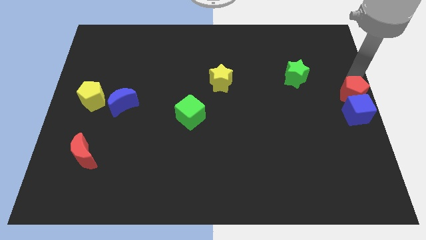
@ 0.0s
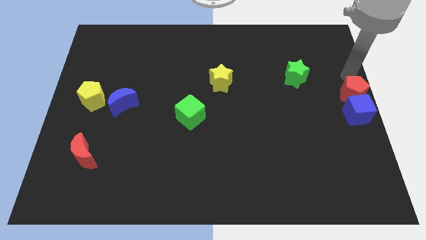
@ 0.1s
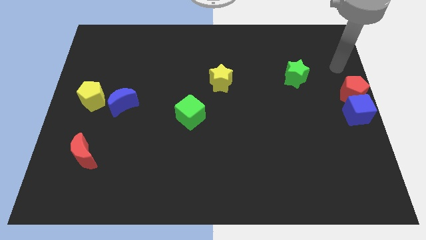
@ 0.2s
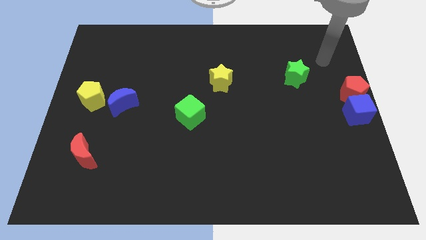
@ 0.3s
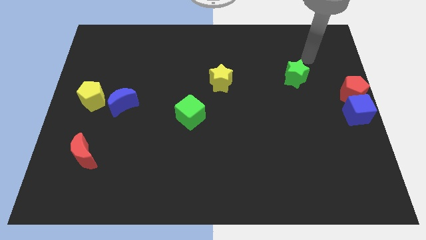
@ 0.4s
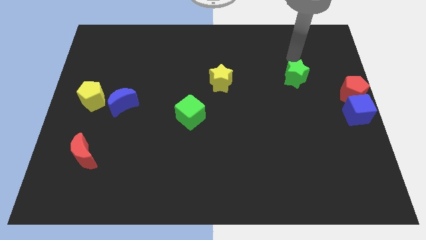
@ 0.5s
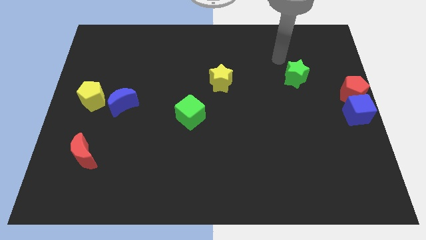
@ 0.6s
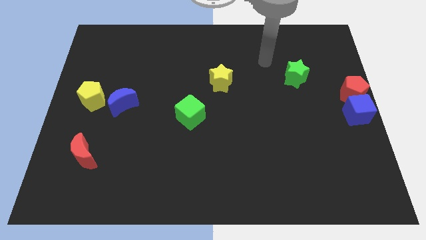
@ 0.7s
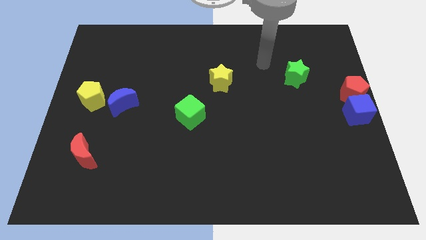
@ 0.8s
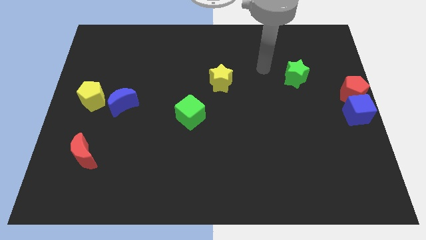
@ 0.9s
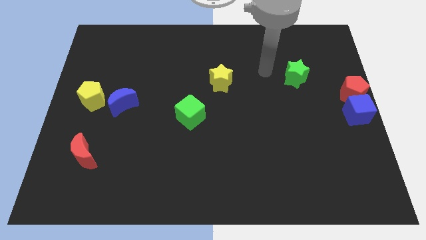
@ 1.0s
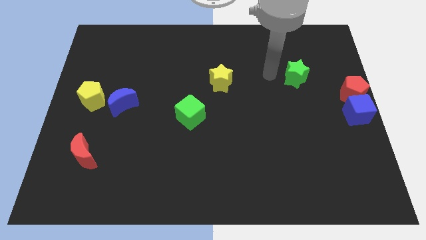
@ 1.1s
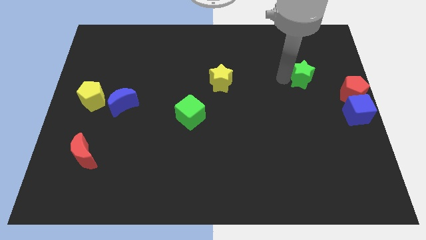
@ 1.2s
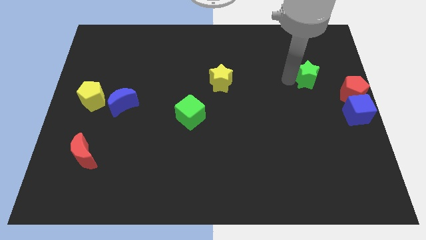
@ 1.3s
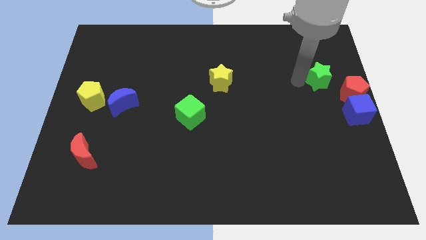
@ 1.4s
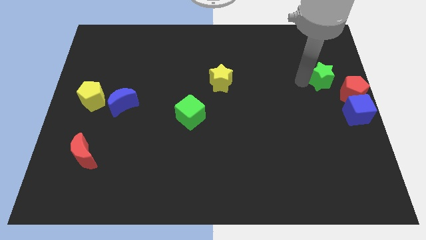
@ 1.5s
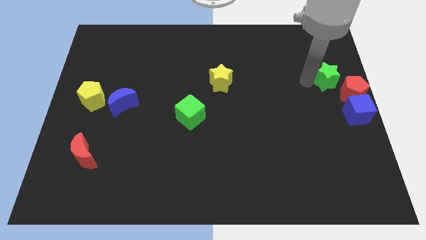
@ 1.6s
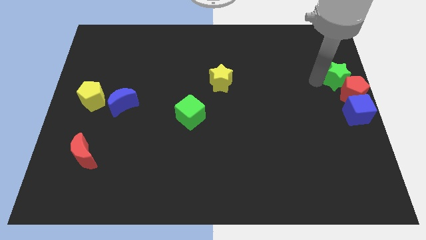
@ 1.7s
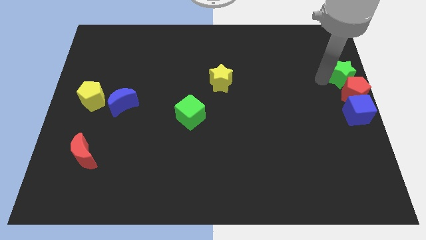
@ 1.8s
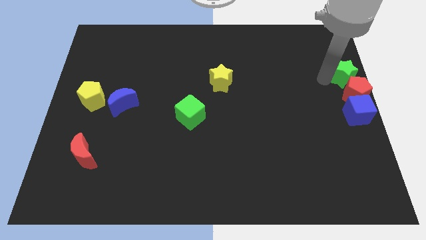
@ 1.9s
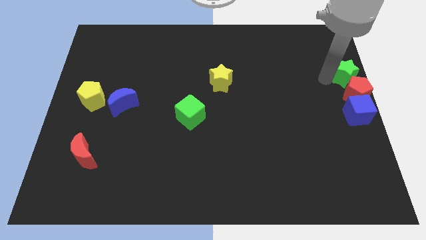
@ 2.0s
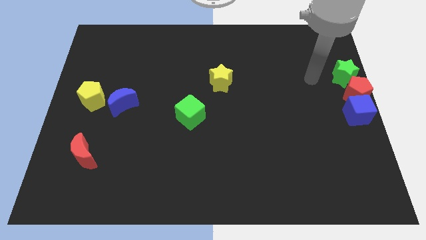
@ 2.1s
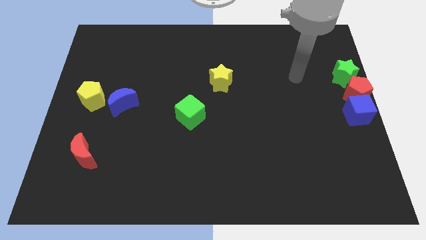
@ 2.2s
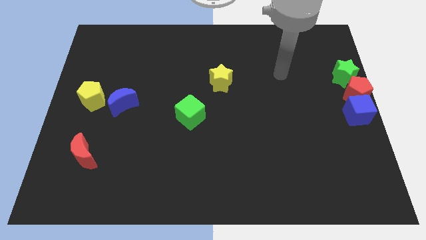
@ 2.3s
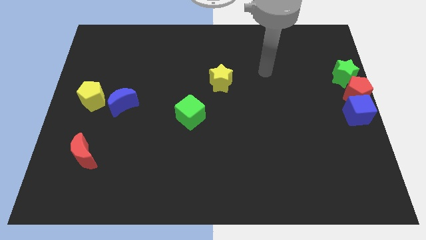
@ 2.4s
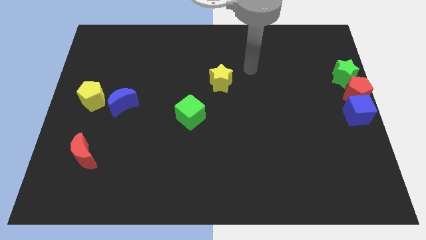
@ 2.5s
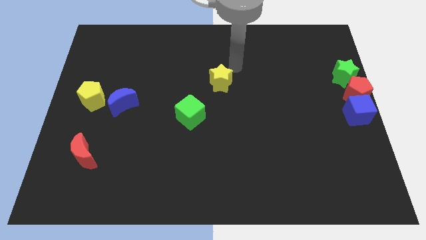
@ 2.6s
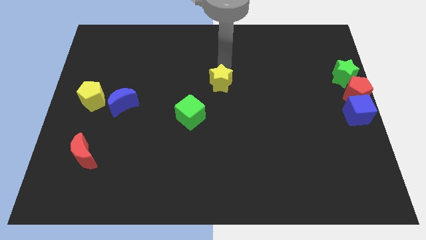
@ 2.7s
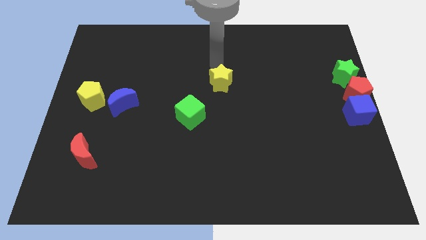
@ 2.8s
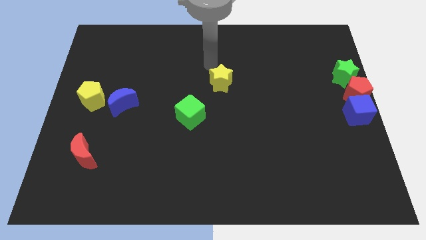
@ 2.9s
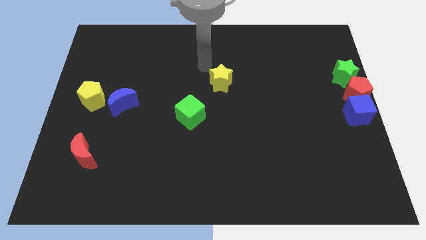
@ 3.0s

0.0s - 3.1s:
push the green star to the top of the red pentagon

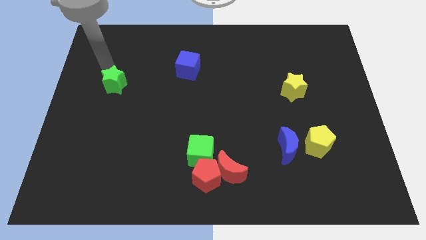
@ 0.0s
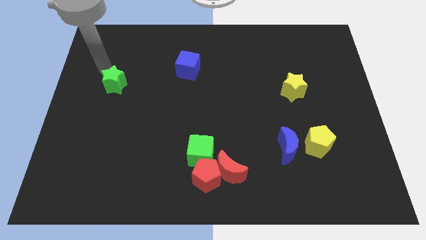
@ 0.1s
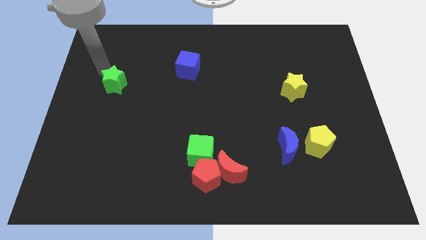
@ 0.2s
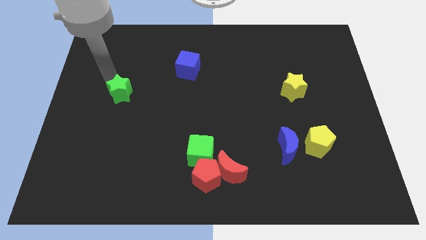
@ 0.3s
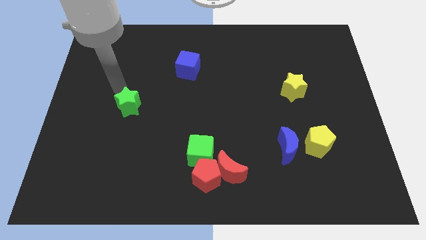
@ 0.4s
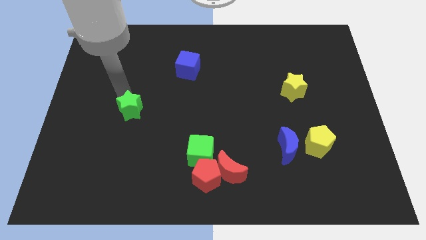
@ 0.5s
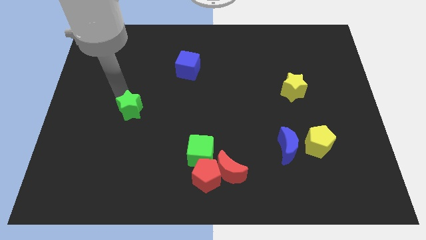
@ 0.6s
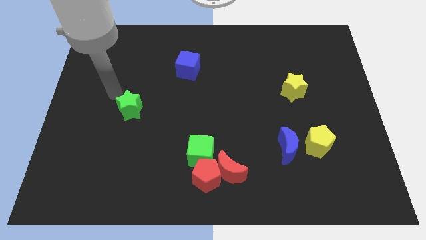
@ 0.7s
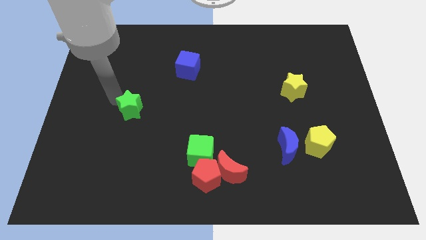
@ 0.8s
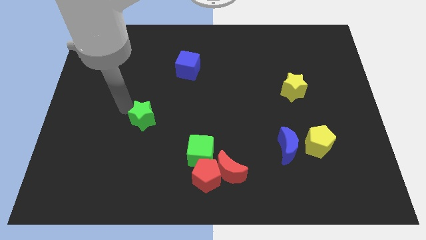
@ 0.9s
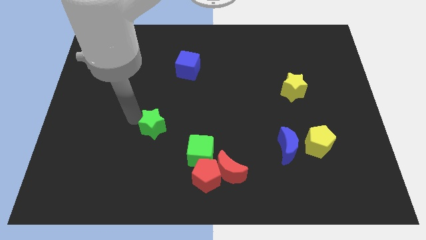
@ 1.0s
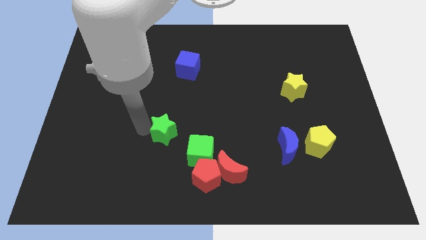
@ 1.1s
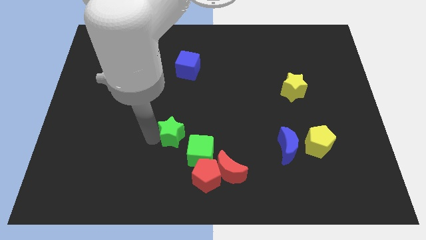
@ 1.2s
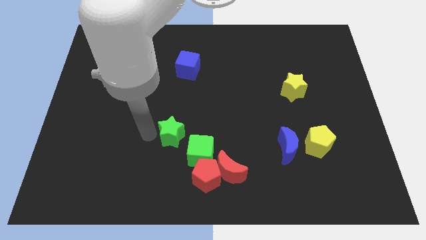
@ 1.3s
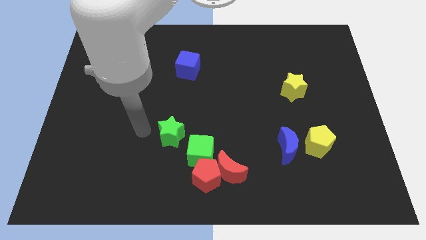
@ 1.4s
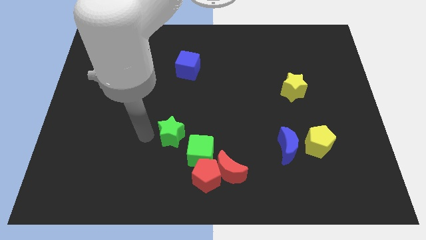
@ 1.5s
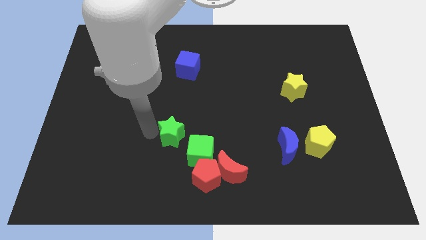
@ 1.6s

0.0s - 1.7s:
slide the green star close to the green cube

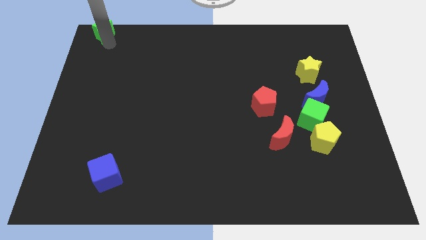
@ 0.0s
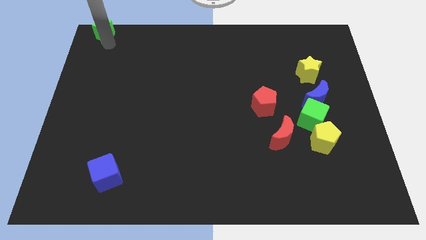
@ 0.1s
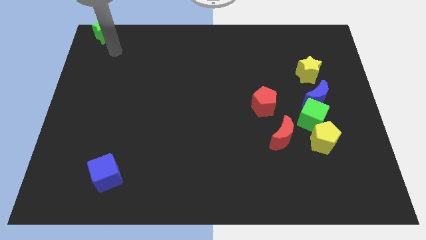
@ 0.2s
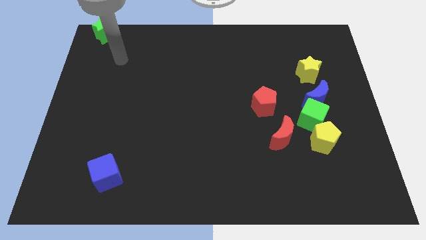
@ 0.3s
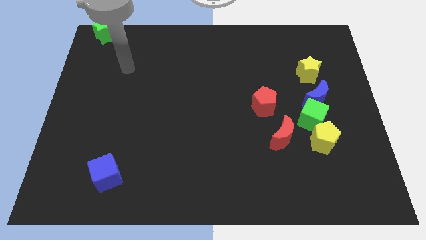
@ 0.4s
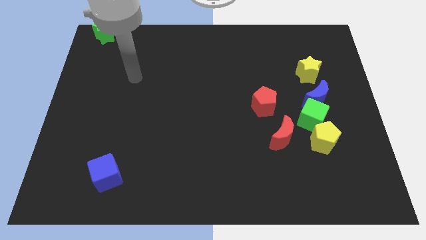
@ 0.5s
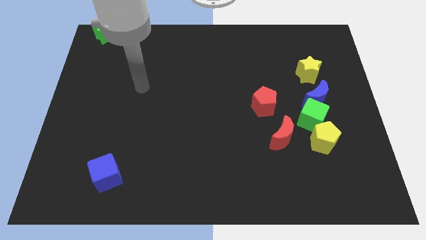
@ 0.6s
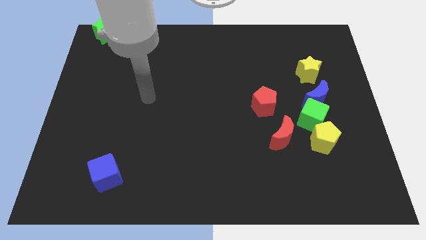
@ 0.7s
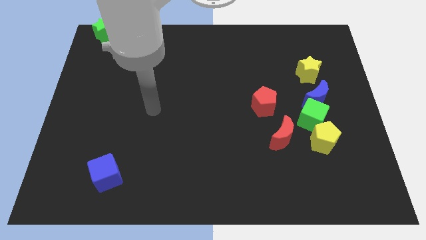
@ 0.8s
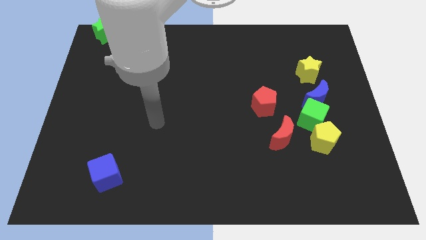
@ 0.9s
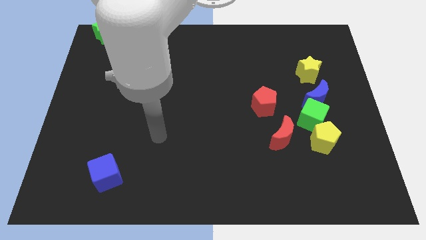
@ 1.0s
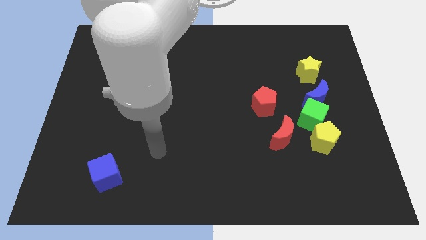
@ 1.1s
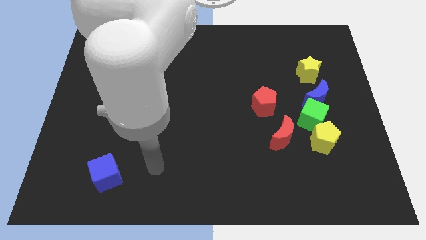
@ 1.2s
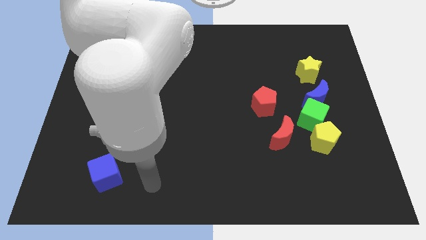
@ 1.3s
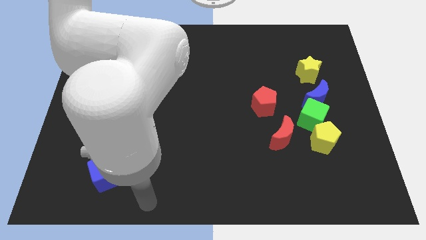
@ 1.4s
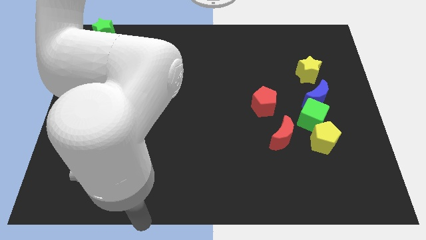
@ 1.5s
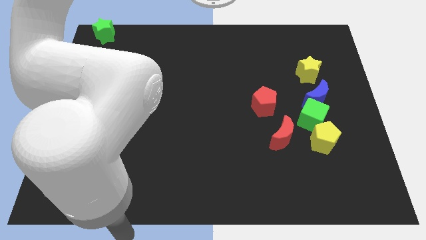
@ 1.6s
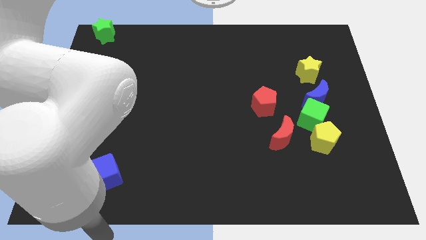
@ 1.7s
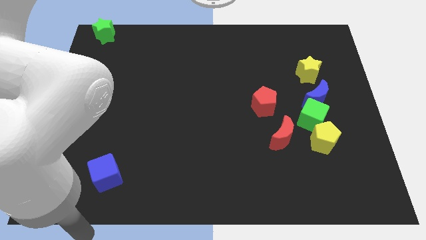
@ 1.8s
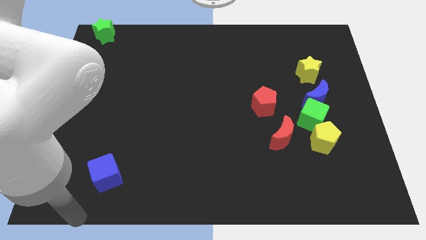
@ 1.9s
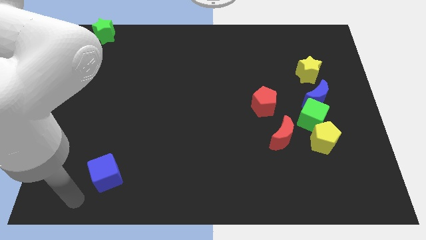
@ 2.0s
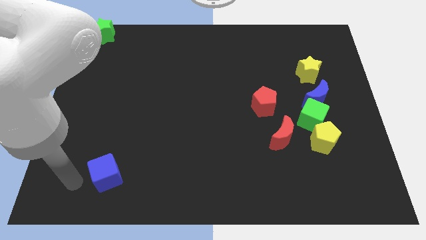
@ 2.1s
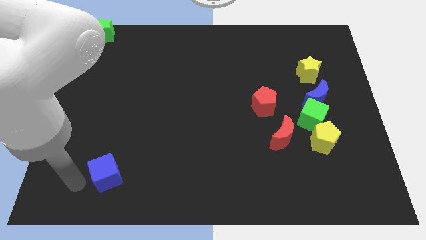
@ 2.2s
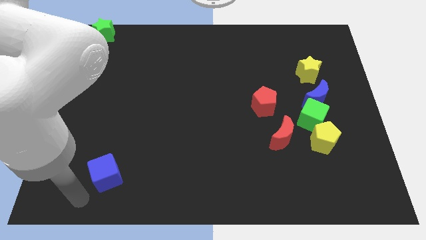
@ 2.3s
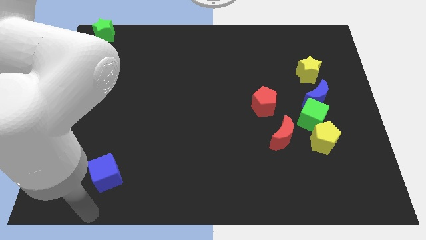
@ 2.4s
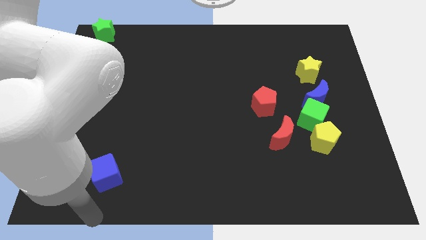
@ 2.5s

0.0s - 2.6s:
move the arm away from the green star

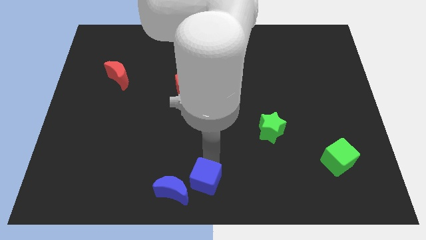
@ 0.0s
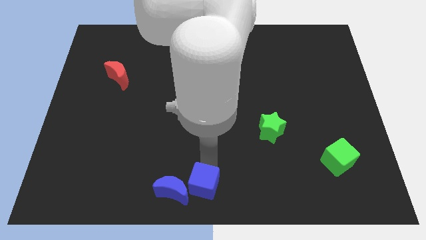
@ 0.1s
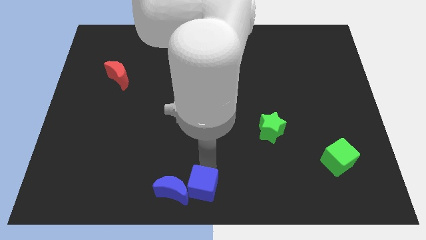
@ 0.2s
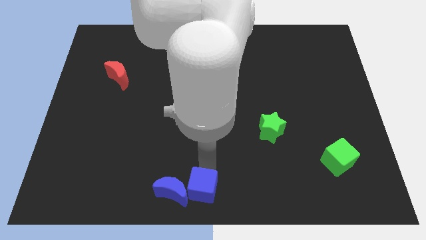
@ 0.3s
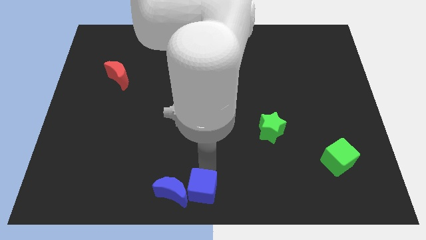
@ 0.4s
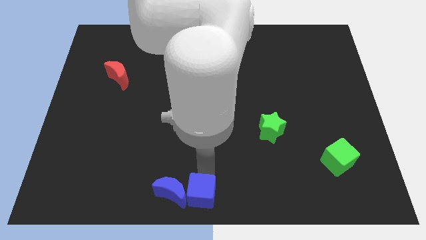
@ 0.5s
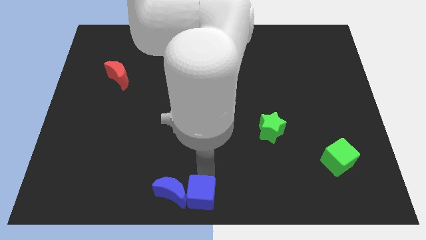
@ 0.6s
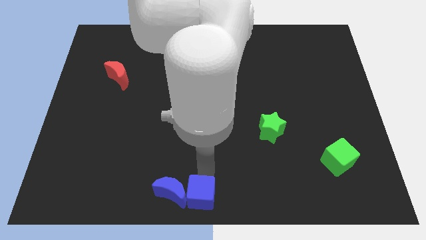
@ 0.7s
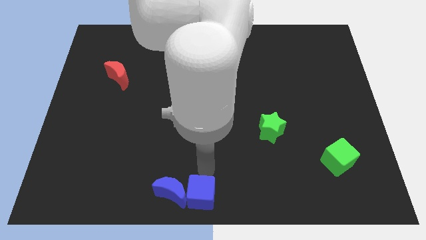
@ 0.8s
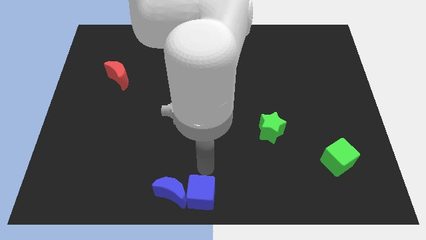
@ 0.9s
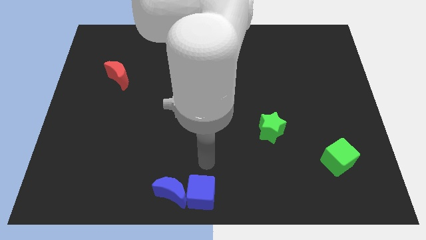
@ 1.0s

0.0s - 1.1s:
push blue cube to the bottom center

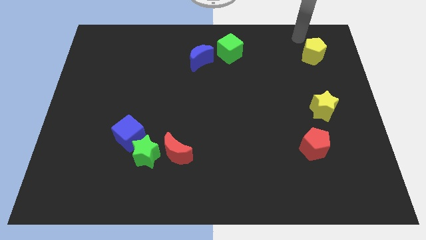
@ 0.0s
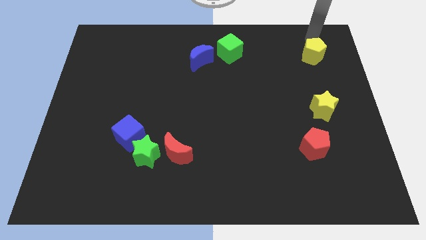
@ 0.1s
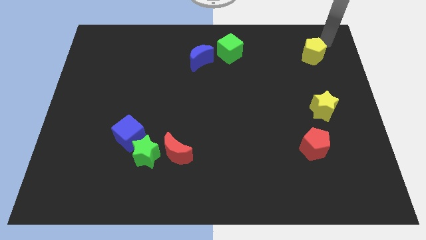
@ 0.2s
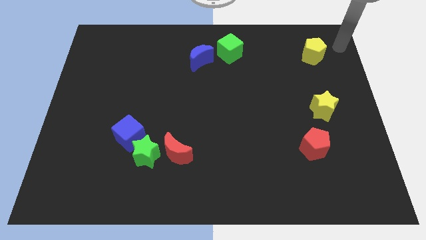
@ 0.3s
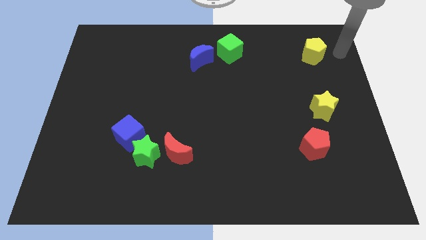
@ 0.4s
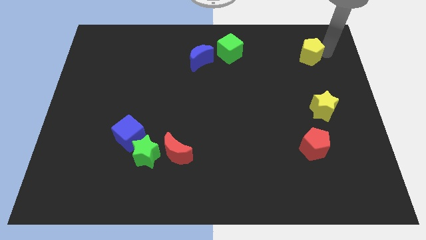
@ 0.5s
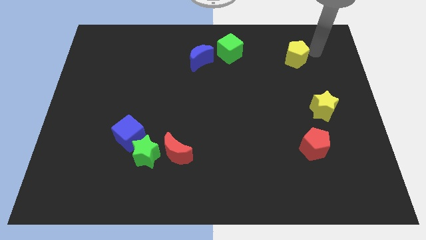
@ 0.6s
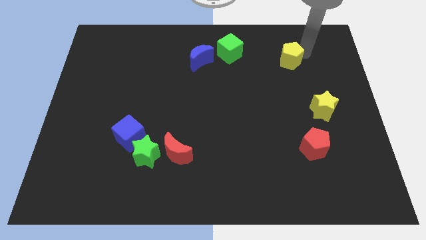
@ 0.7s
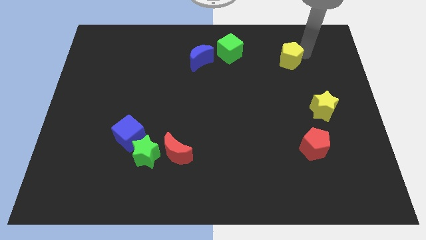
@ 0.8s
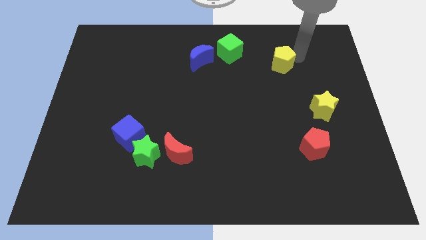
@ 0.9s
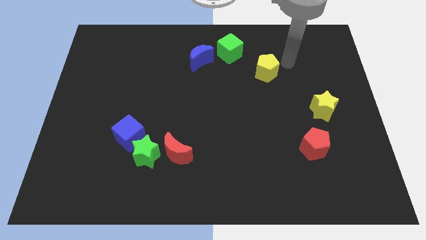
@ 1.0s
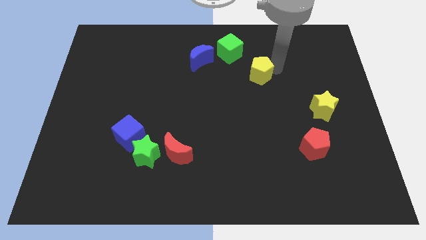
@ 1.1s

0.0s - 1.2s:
move the yellow pentagon in between the green cube and yellow star
